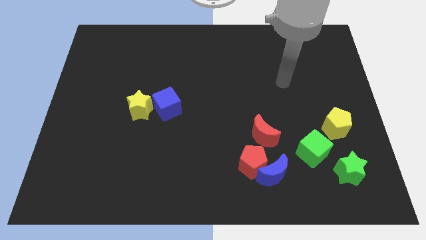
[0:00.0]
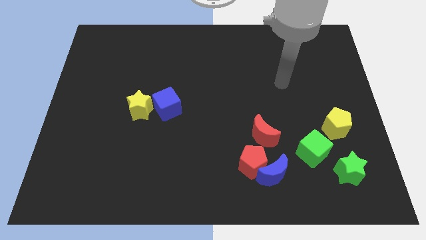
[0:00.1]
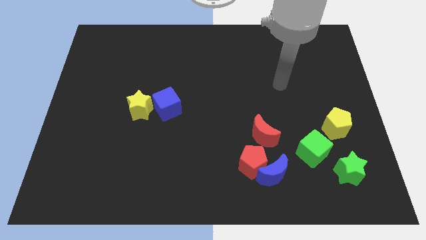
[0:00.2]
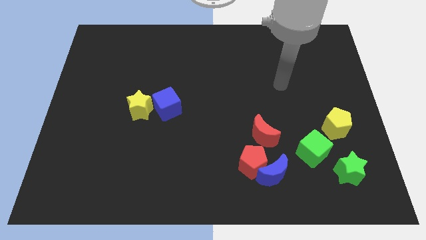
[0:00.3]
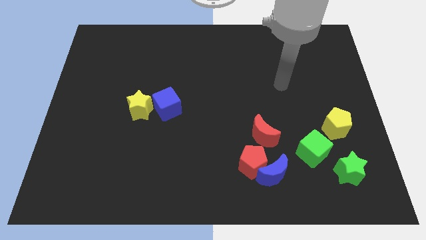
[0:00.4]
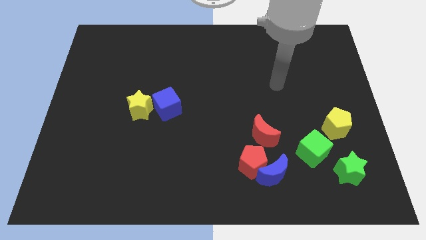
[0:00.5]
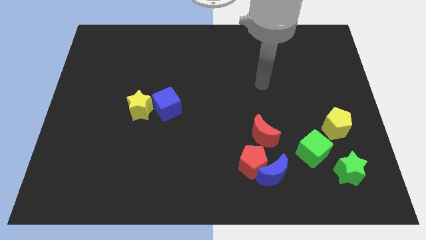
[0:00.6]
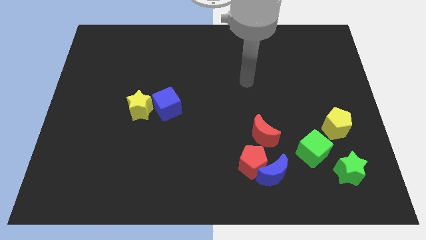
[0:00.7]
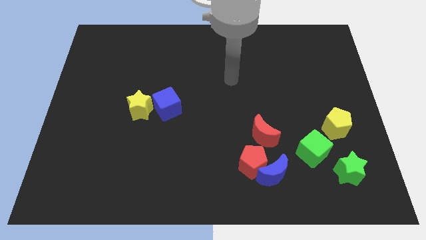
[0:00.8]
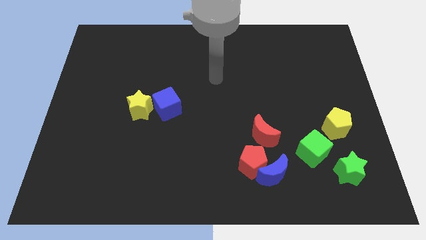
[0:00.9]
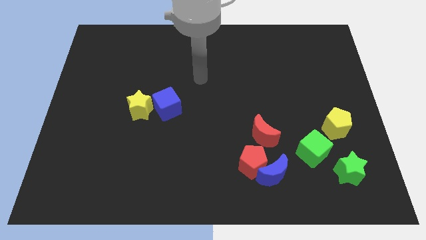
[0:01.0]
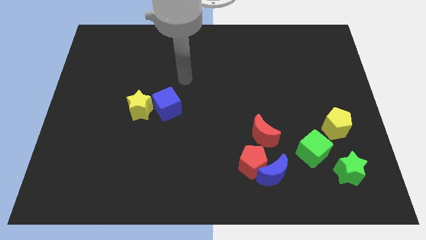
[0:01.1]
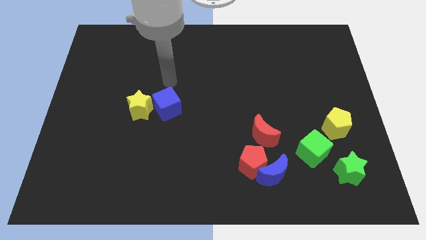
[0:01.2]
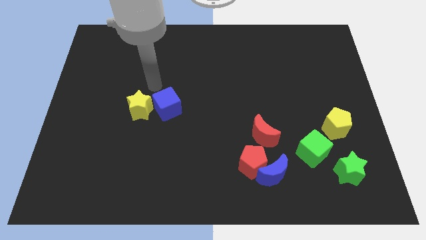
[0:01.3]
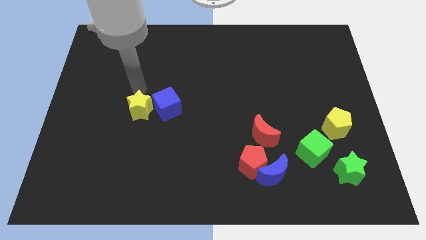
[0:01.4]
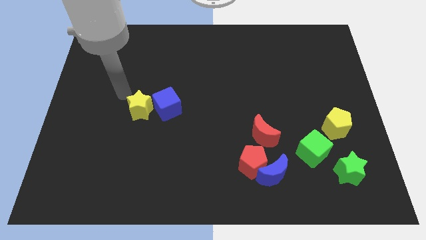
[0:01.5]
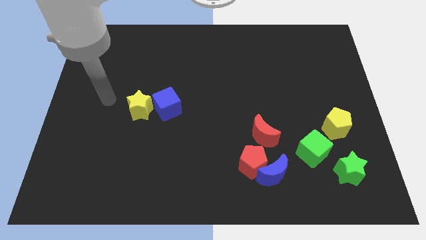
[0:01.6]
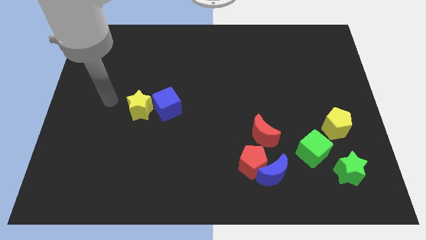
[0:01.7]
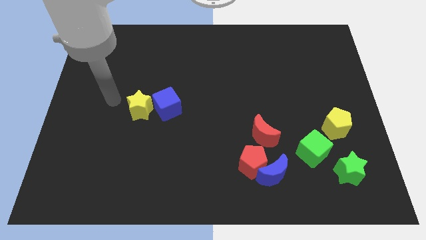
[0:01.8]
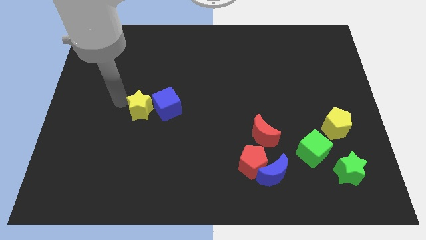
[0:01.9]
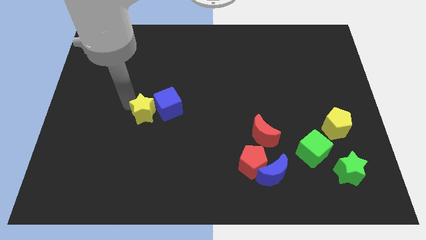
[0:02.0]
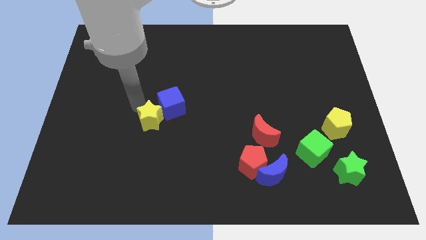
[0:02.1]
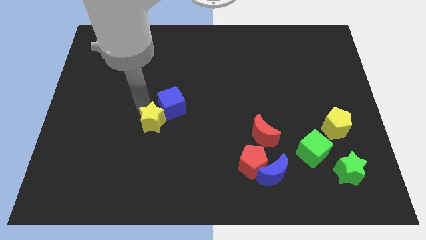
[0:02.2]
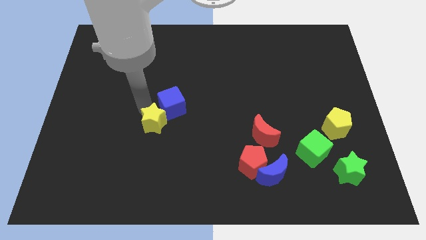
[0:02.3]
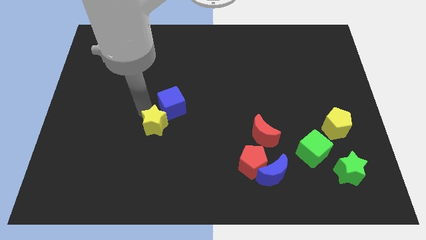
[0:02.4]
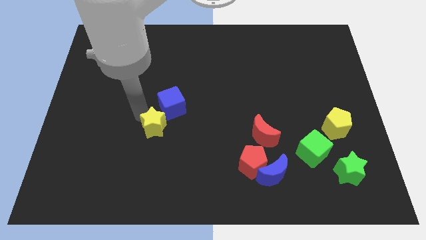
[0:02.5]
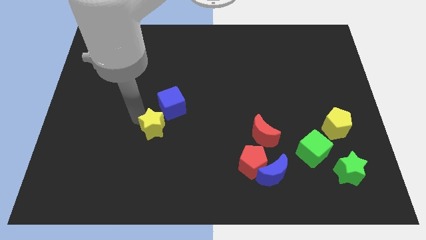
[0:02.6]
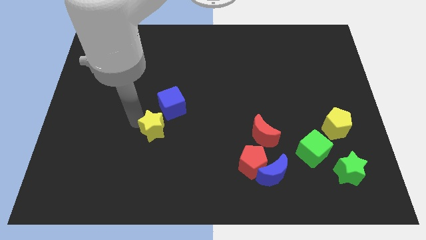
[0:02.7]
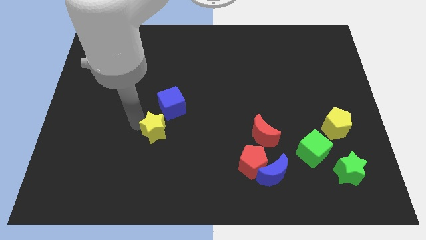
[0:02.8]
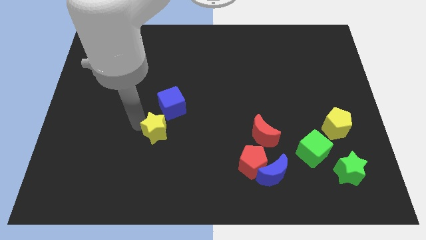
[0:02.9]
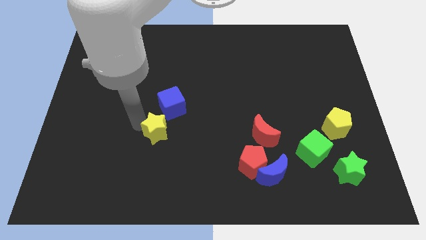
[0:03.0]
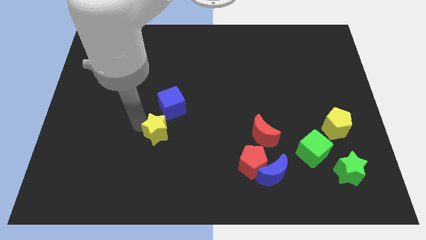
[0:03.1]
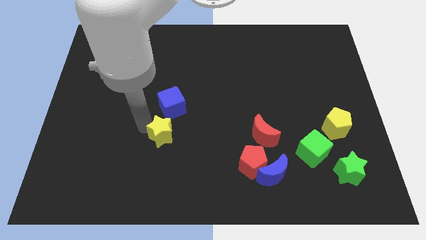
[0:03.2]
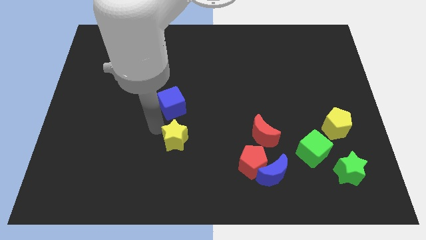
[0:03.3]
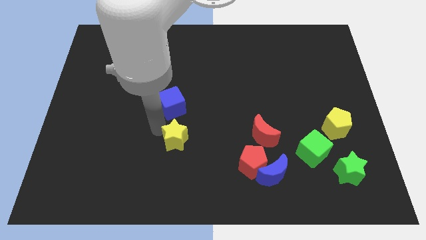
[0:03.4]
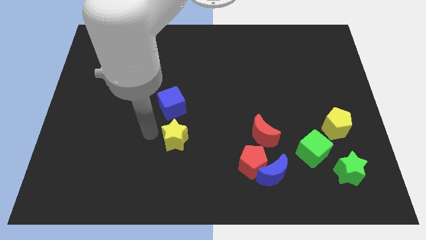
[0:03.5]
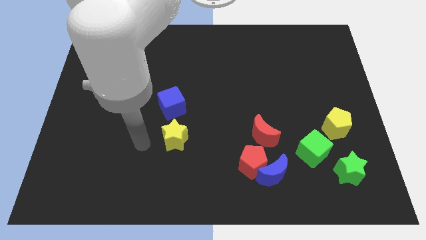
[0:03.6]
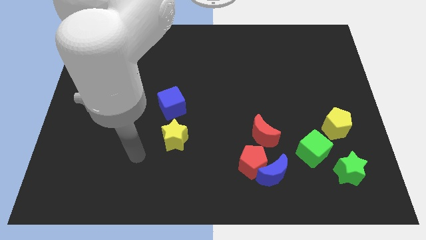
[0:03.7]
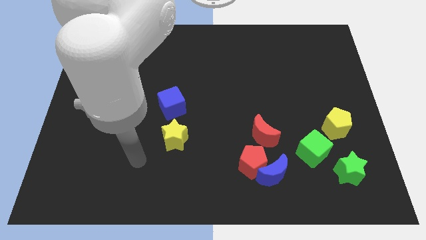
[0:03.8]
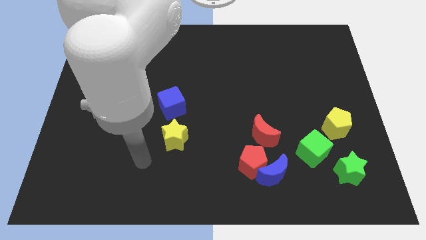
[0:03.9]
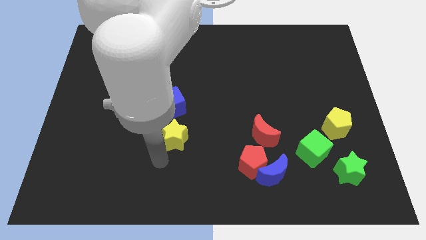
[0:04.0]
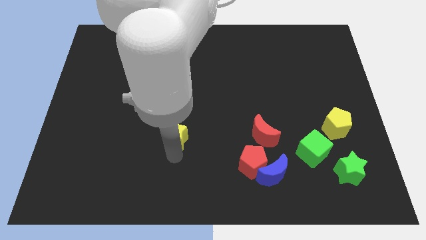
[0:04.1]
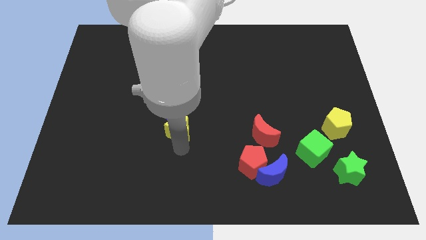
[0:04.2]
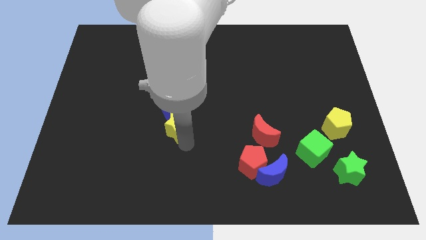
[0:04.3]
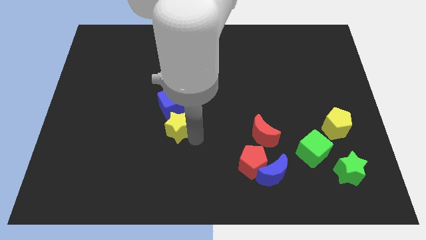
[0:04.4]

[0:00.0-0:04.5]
move the yellow star to the bottom of the blue cube

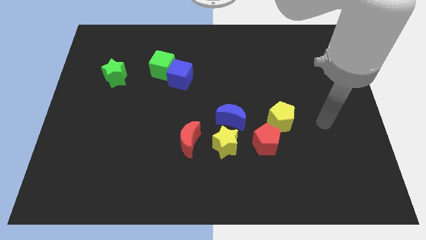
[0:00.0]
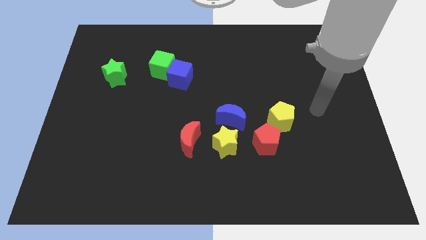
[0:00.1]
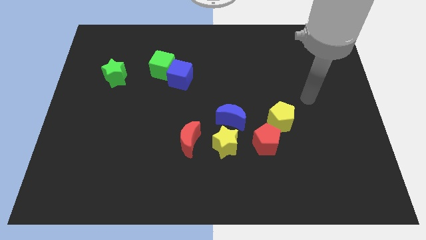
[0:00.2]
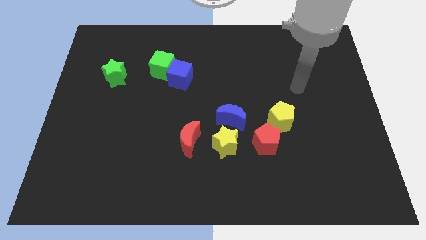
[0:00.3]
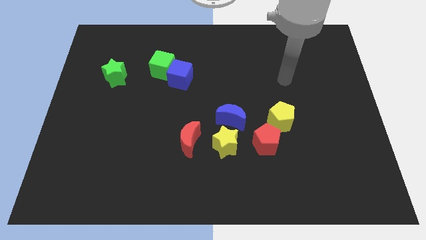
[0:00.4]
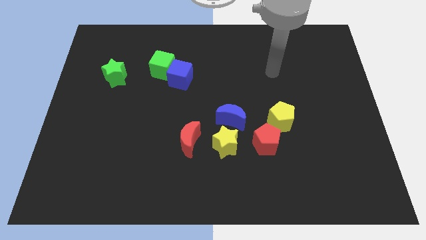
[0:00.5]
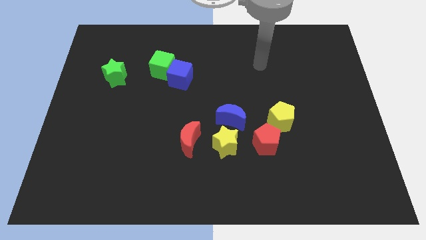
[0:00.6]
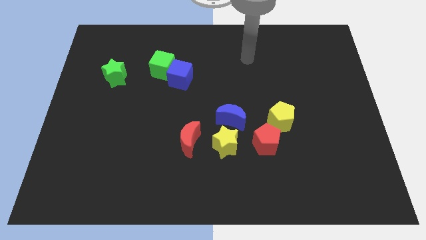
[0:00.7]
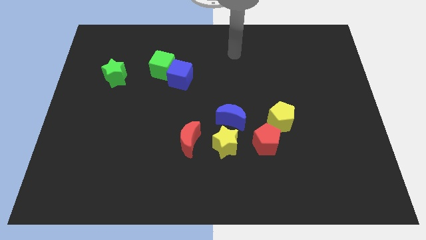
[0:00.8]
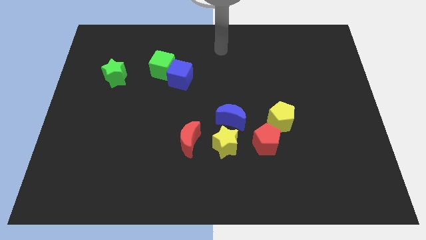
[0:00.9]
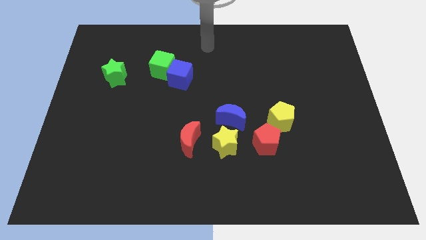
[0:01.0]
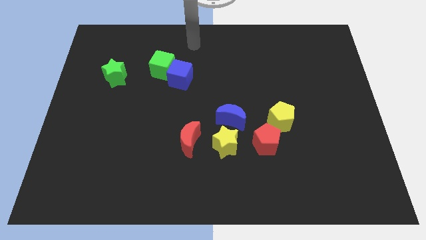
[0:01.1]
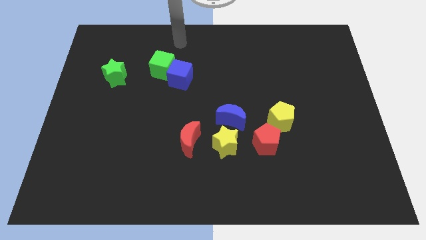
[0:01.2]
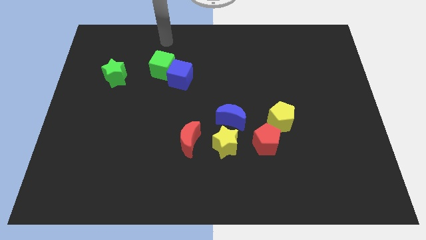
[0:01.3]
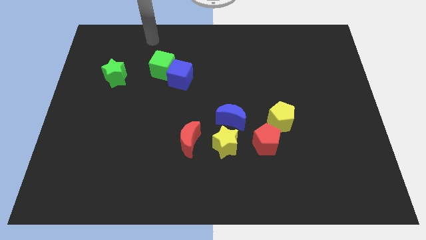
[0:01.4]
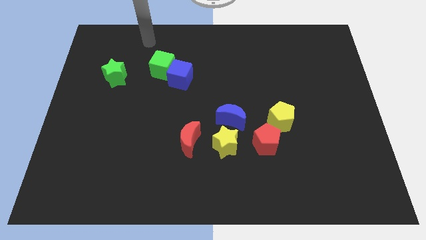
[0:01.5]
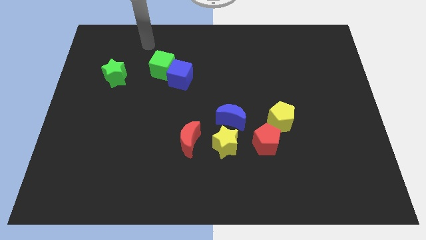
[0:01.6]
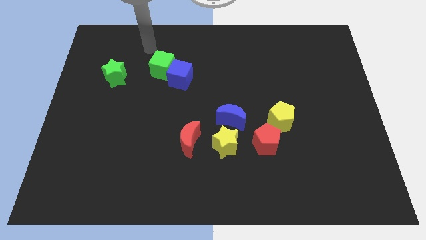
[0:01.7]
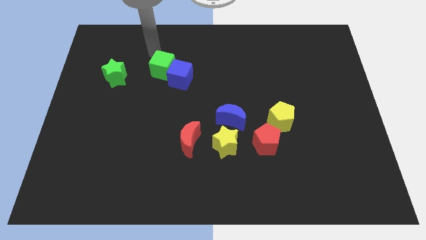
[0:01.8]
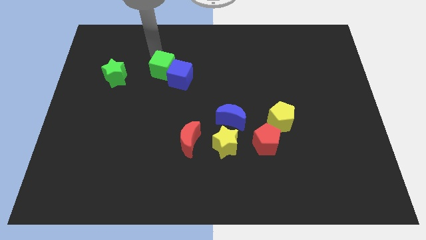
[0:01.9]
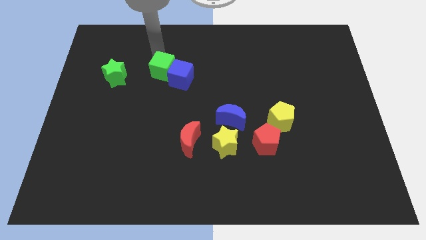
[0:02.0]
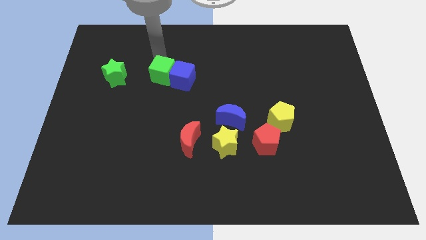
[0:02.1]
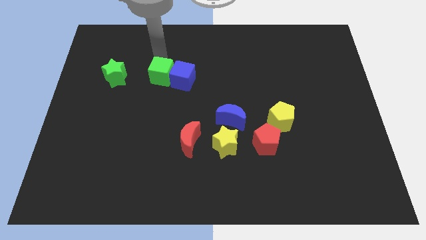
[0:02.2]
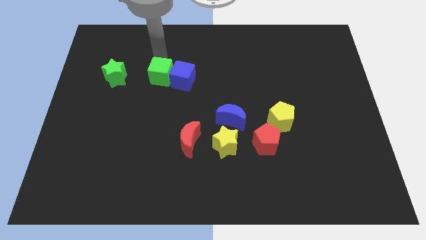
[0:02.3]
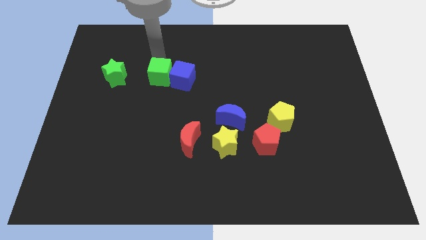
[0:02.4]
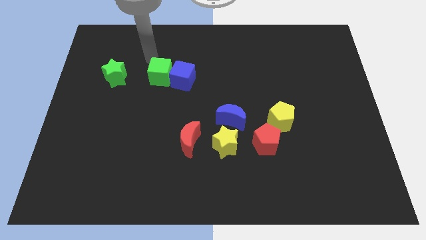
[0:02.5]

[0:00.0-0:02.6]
move arm near green cube

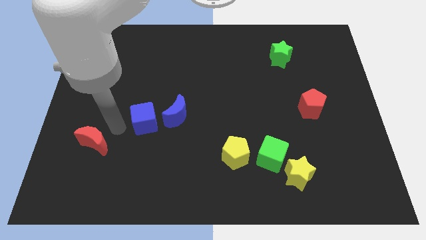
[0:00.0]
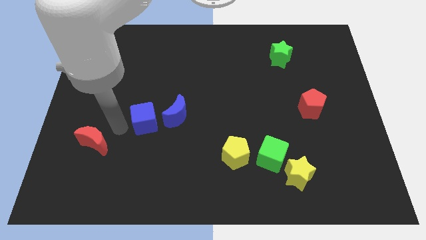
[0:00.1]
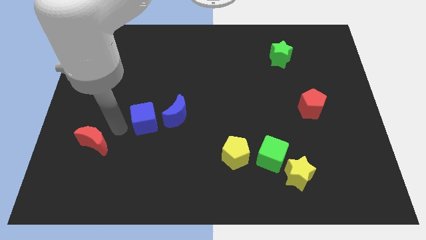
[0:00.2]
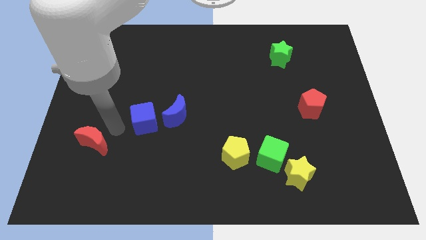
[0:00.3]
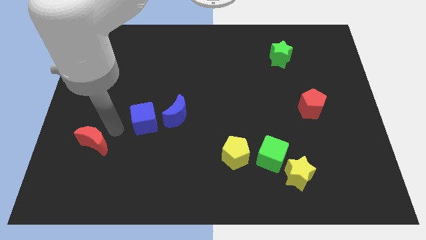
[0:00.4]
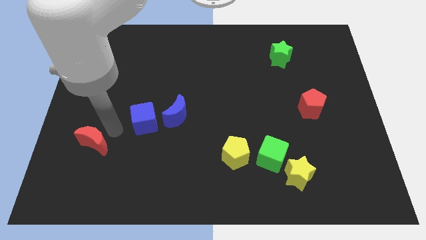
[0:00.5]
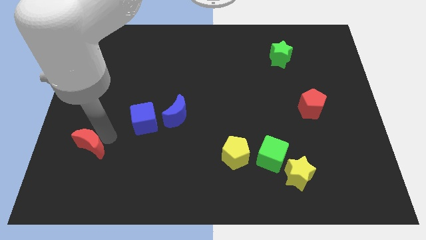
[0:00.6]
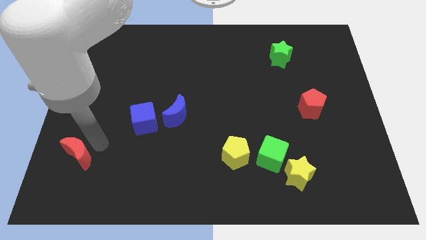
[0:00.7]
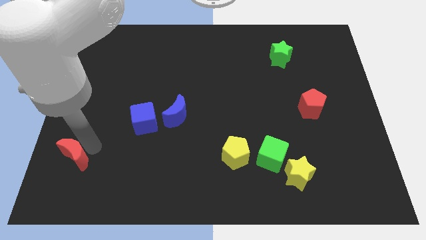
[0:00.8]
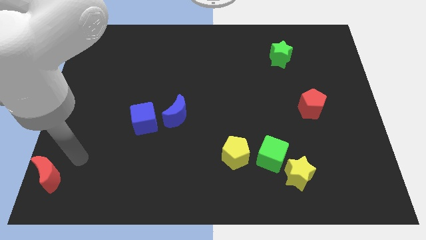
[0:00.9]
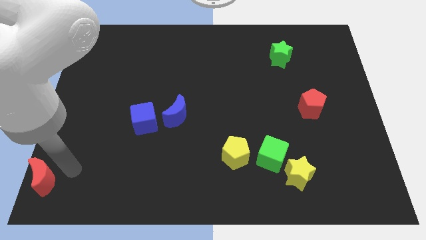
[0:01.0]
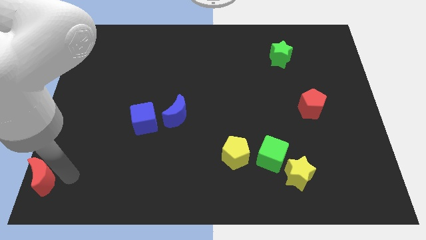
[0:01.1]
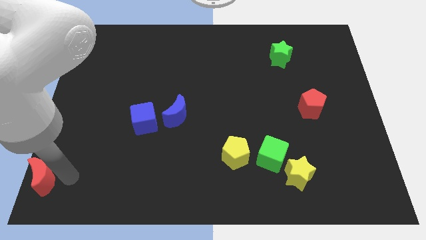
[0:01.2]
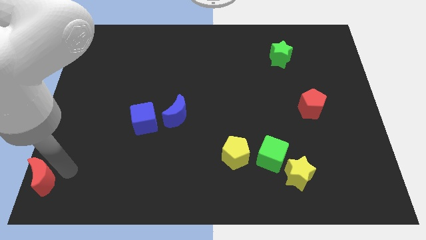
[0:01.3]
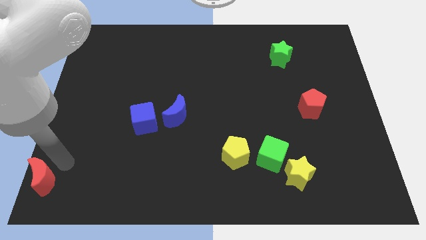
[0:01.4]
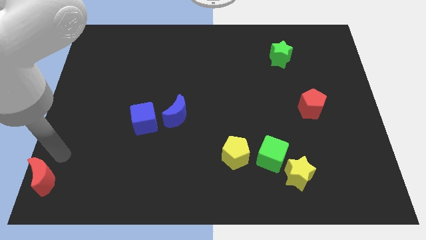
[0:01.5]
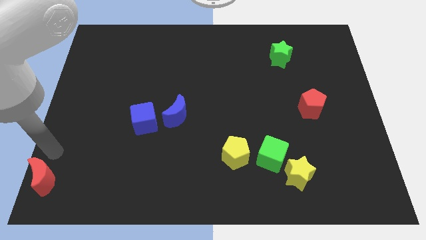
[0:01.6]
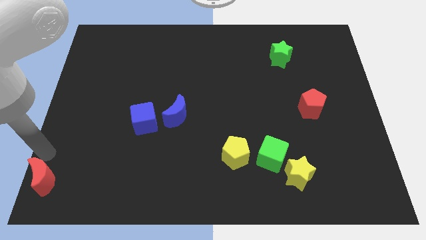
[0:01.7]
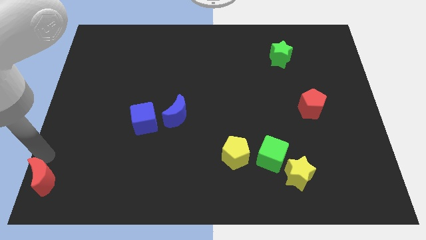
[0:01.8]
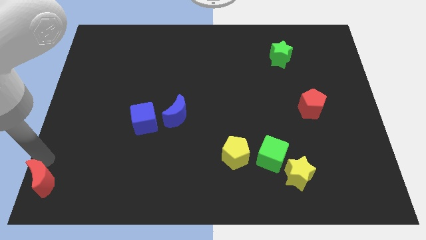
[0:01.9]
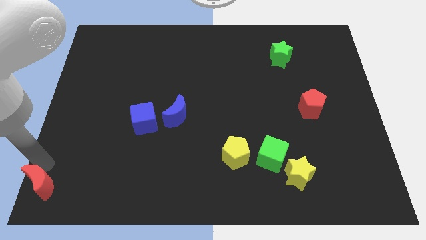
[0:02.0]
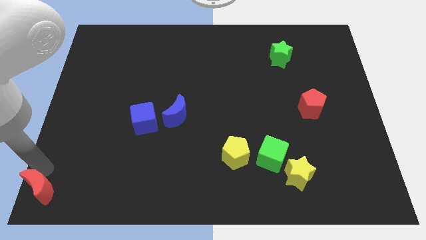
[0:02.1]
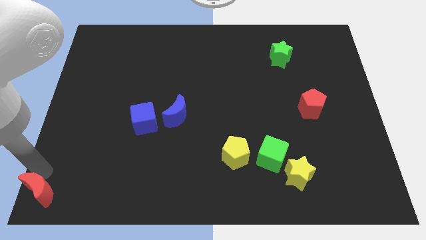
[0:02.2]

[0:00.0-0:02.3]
push the red crescent at the bottom left side
